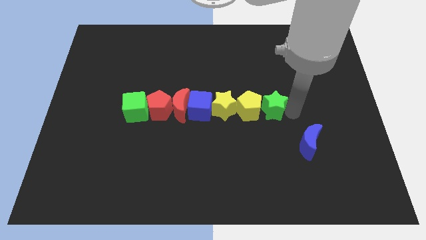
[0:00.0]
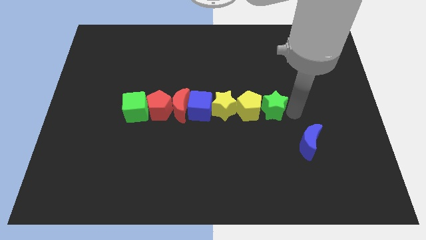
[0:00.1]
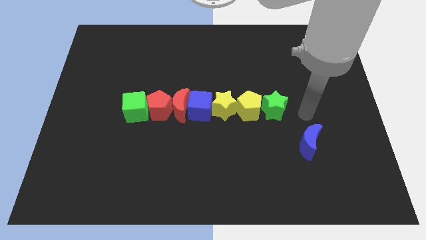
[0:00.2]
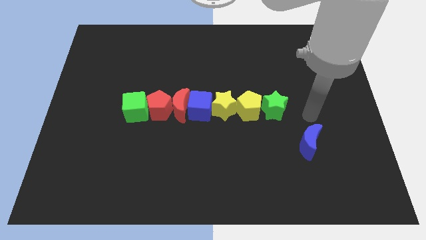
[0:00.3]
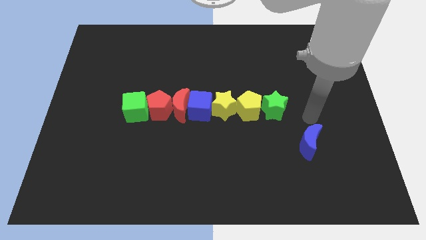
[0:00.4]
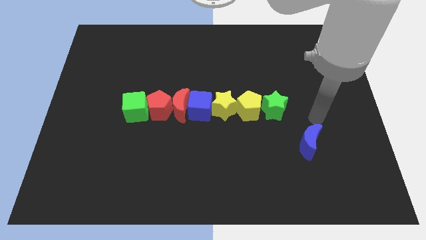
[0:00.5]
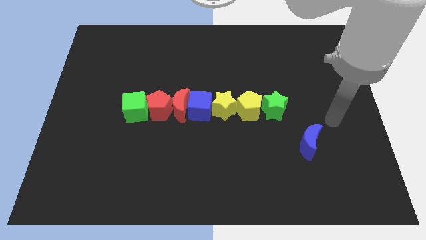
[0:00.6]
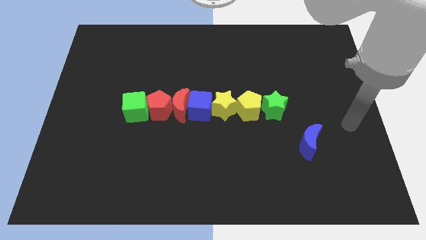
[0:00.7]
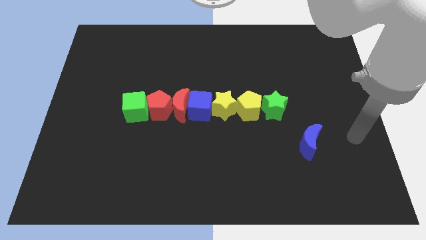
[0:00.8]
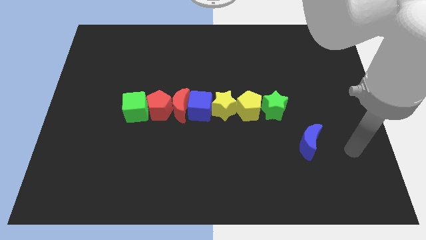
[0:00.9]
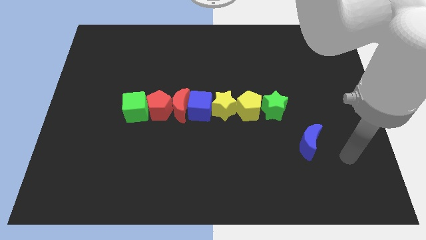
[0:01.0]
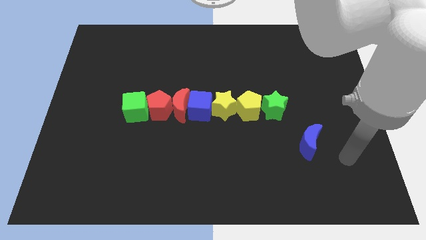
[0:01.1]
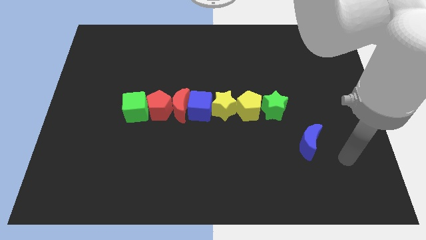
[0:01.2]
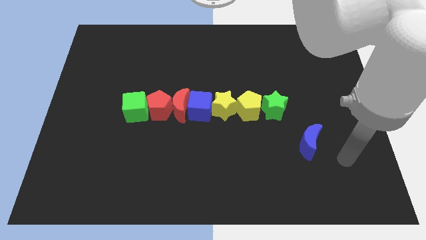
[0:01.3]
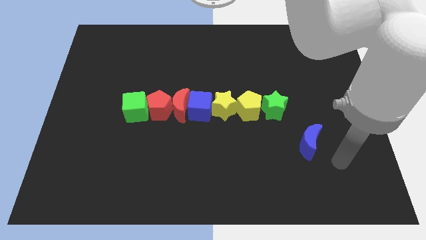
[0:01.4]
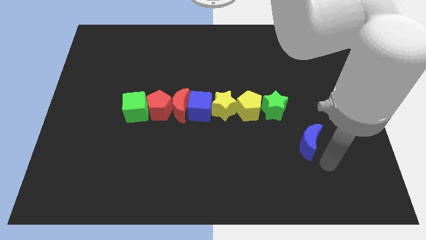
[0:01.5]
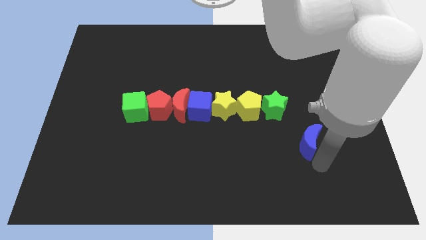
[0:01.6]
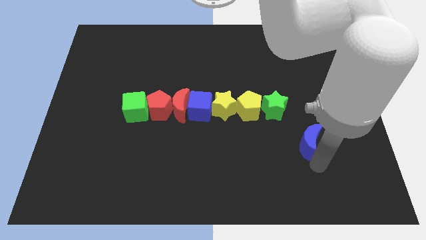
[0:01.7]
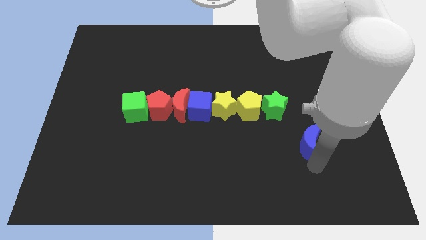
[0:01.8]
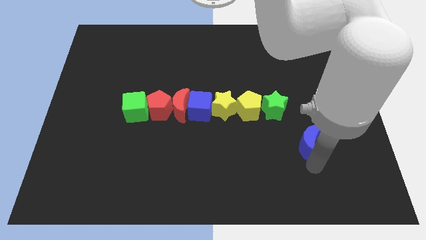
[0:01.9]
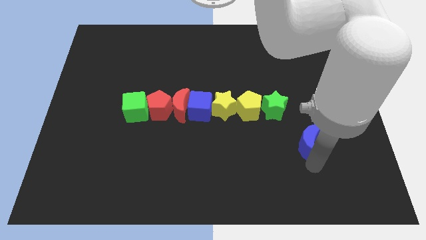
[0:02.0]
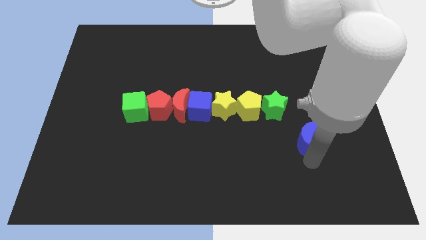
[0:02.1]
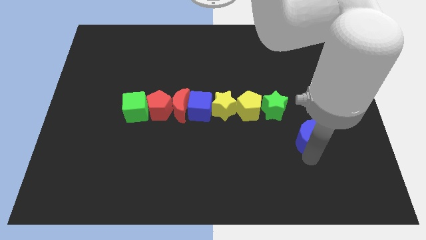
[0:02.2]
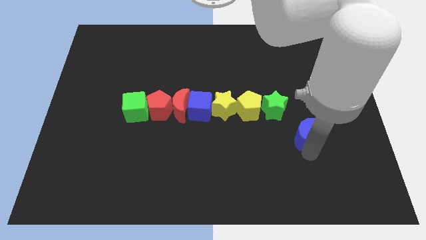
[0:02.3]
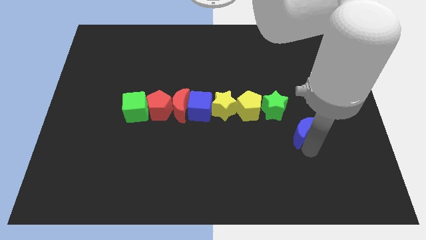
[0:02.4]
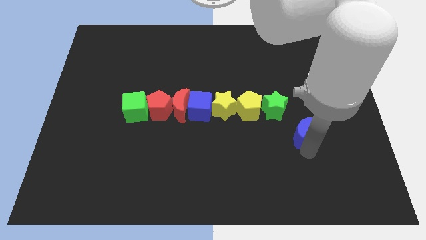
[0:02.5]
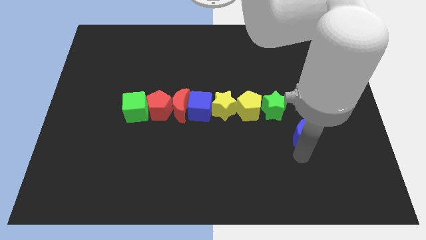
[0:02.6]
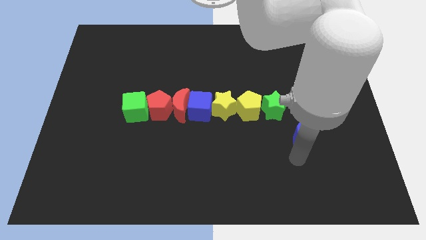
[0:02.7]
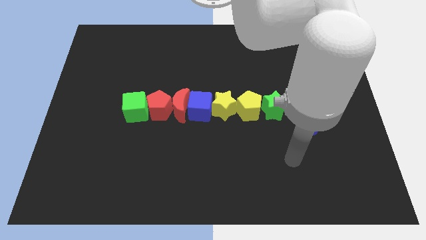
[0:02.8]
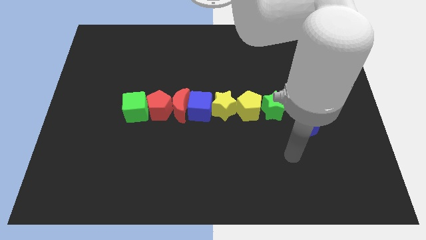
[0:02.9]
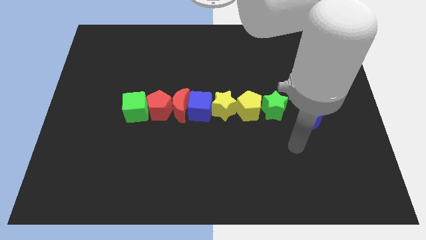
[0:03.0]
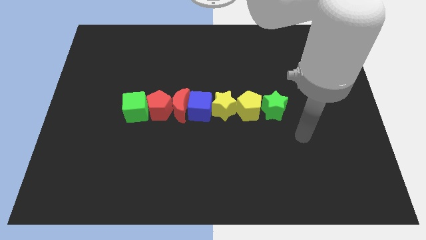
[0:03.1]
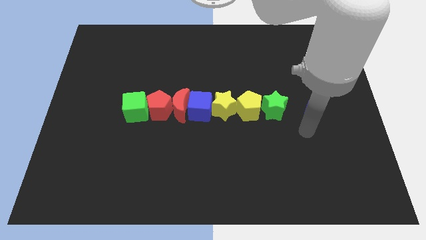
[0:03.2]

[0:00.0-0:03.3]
move the blue crescent to the right side of the green star

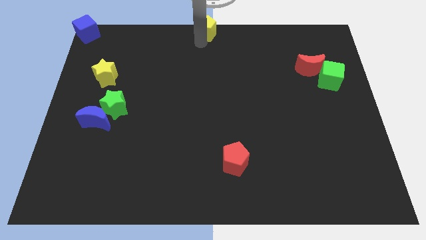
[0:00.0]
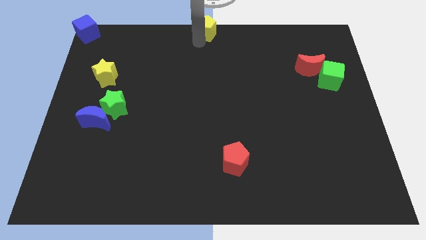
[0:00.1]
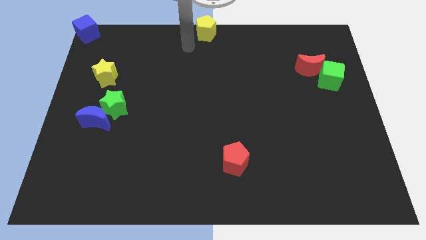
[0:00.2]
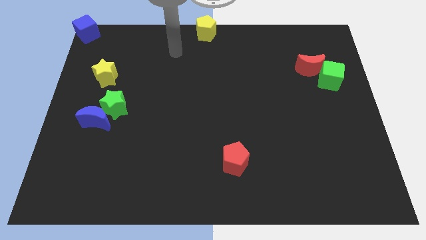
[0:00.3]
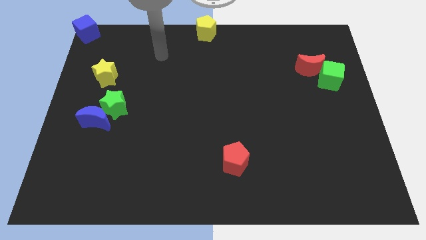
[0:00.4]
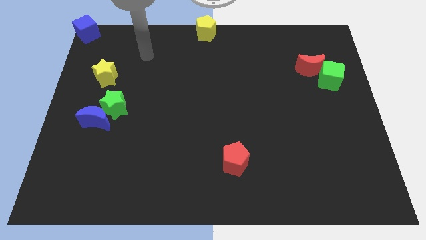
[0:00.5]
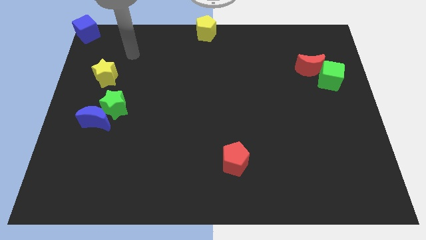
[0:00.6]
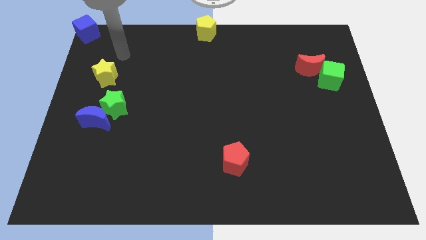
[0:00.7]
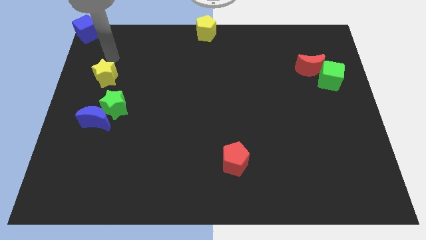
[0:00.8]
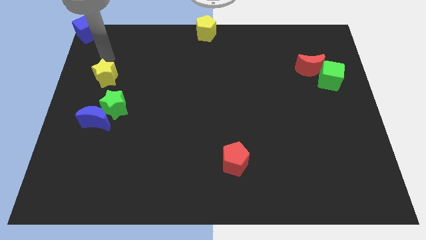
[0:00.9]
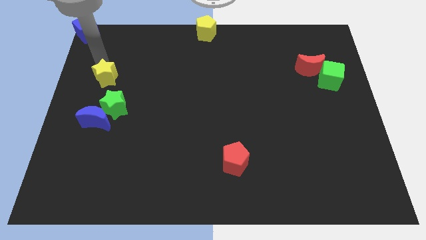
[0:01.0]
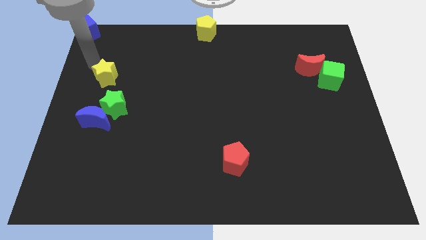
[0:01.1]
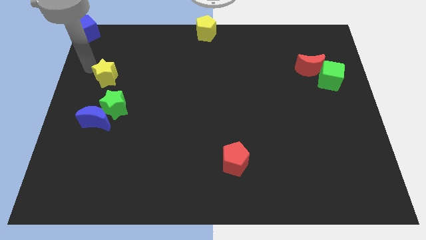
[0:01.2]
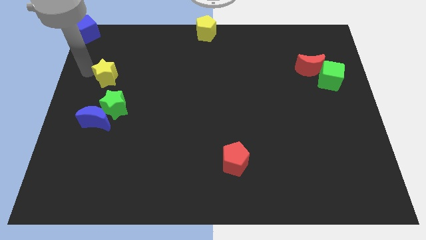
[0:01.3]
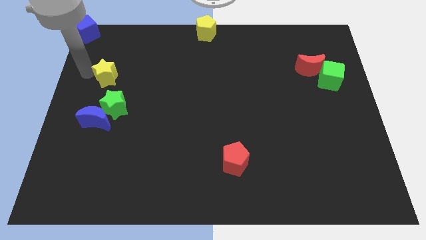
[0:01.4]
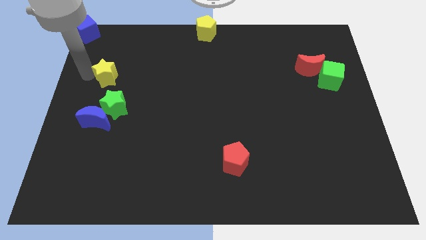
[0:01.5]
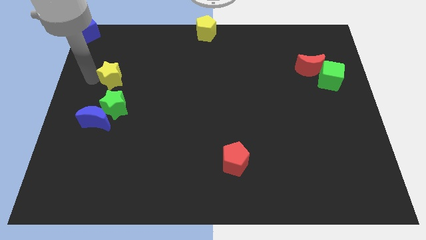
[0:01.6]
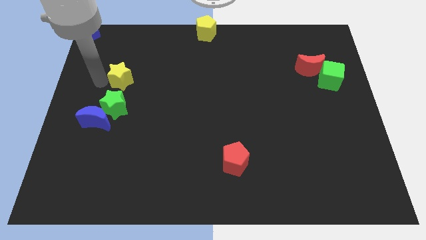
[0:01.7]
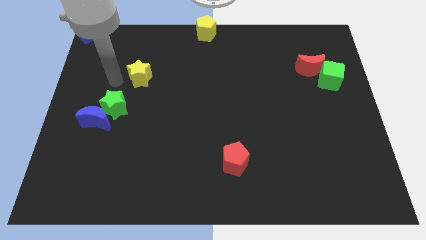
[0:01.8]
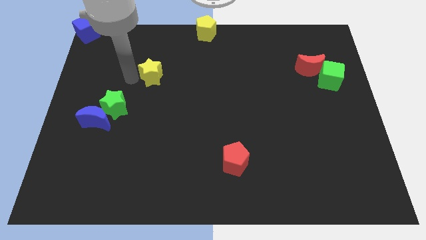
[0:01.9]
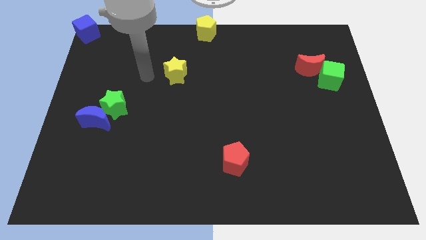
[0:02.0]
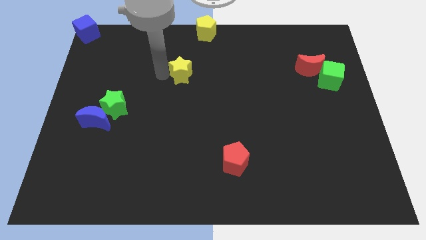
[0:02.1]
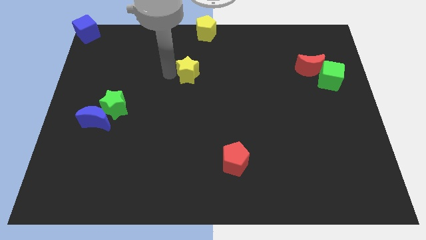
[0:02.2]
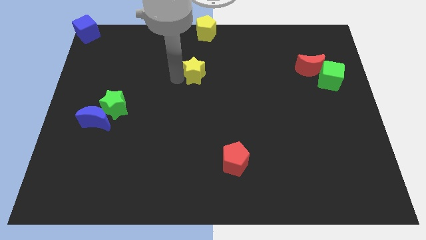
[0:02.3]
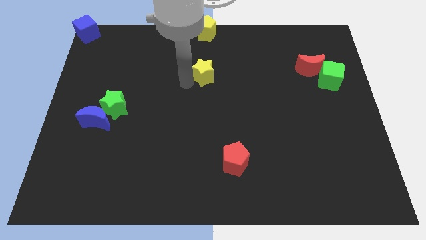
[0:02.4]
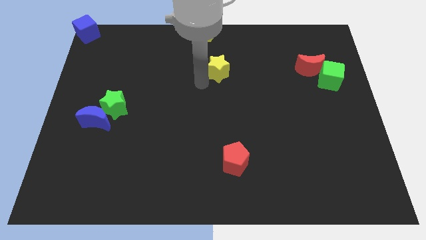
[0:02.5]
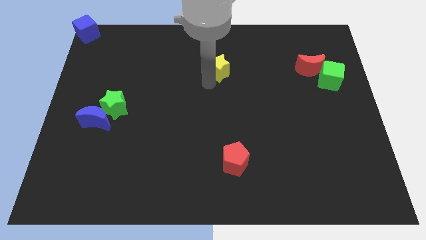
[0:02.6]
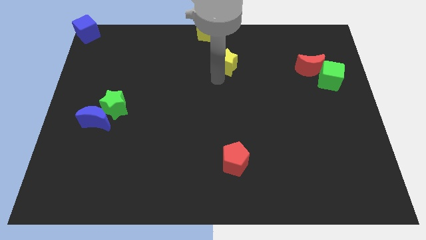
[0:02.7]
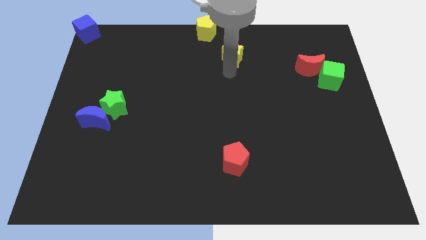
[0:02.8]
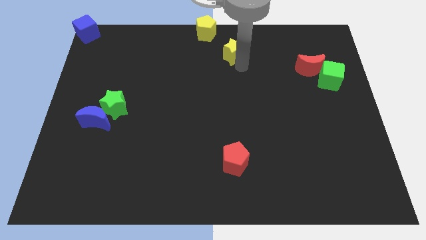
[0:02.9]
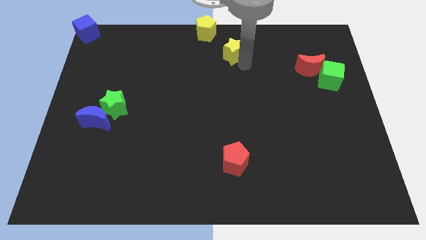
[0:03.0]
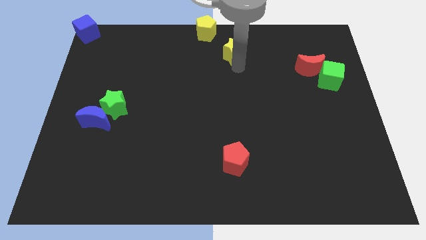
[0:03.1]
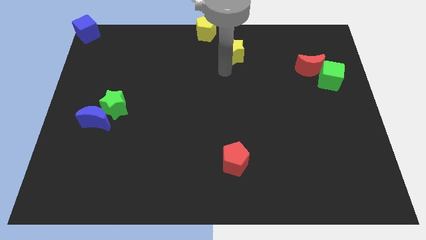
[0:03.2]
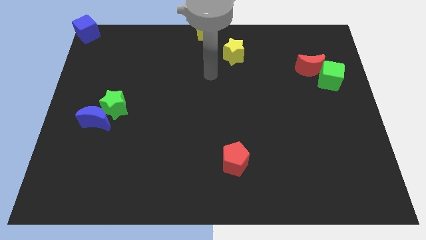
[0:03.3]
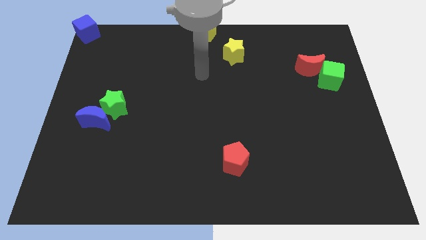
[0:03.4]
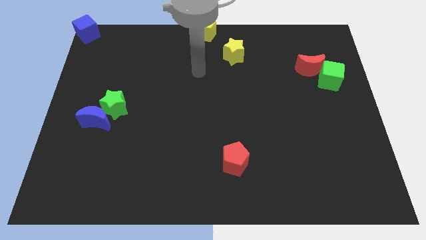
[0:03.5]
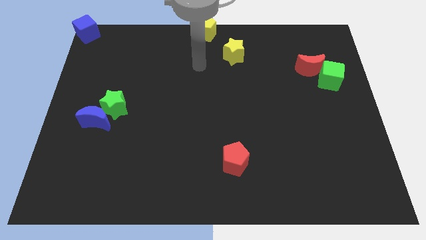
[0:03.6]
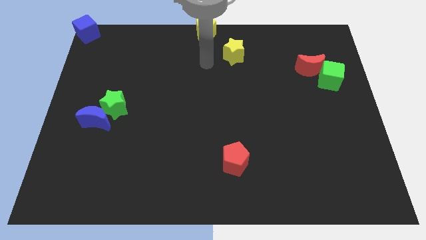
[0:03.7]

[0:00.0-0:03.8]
move the yellow star diagonal below yellow pentagon

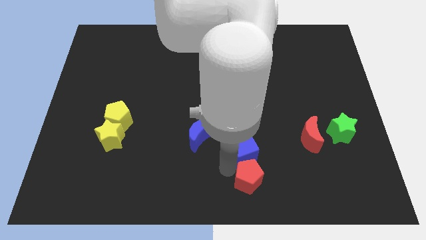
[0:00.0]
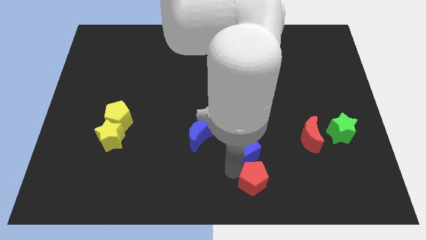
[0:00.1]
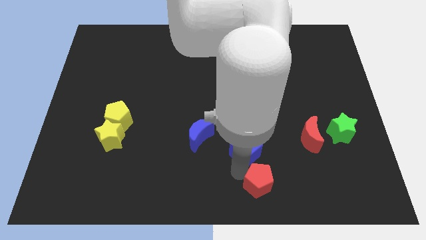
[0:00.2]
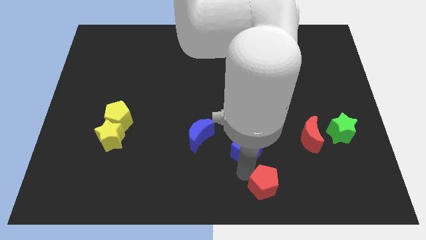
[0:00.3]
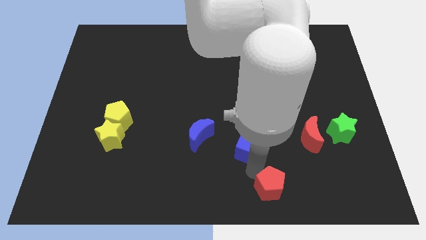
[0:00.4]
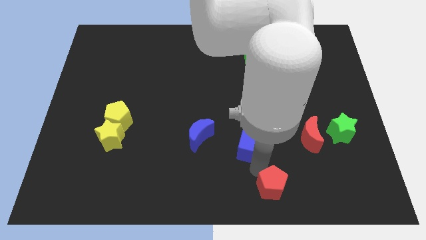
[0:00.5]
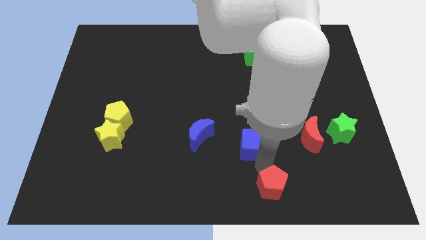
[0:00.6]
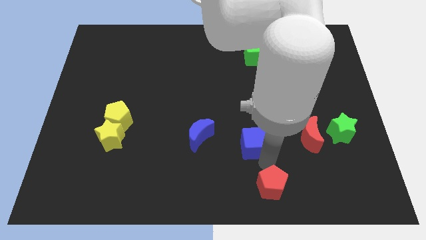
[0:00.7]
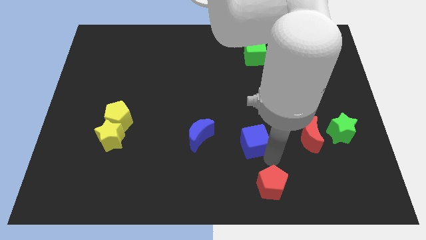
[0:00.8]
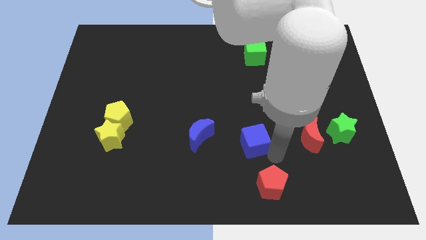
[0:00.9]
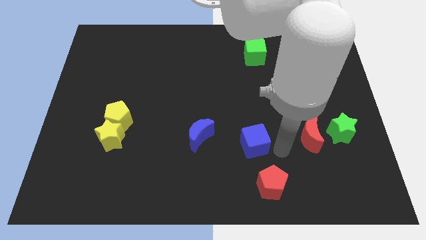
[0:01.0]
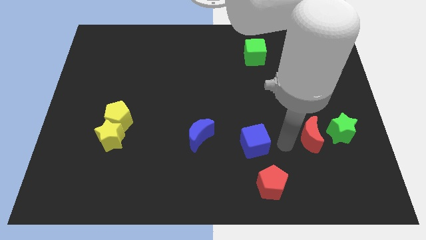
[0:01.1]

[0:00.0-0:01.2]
separate the blue cube and the red pentagon

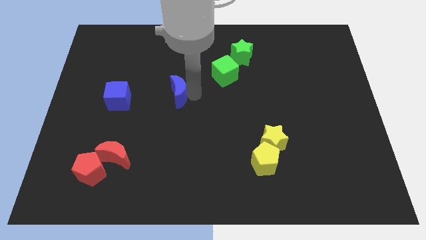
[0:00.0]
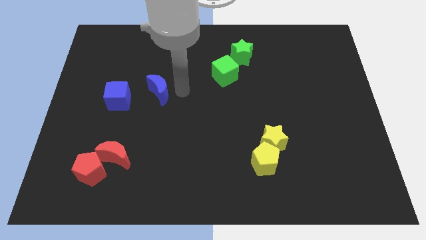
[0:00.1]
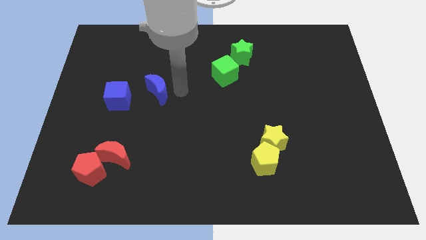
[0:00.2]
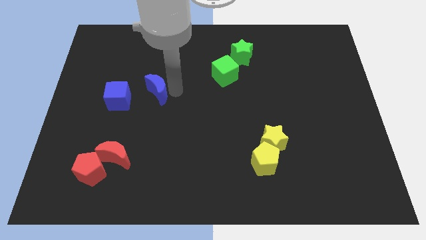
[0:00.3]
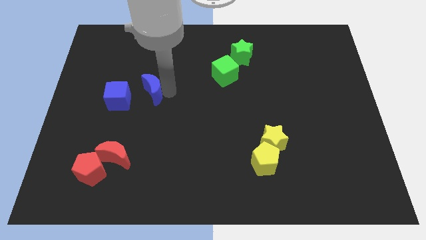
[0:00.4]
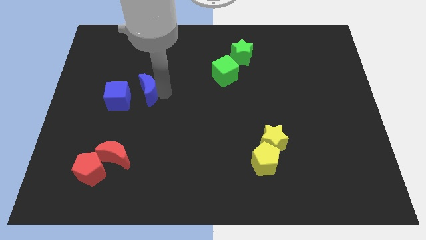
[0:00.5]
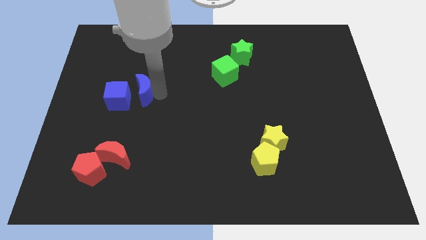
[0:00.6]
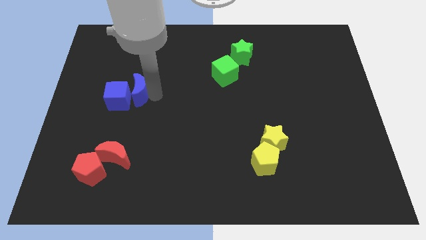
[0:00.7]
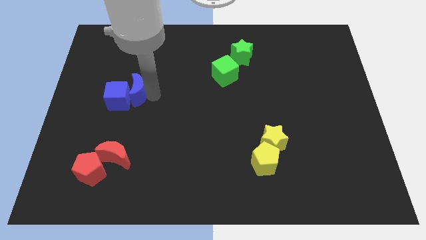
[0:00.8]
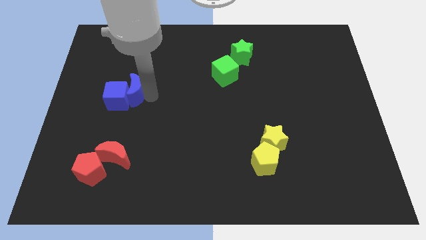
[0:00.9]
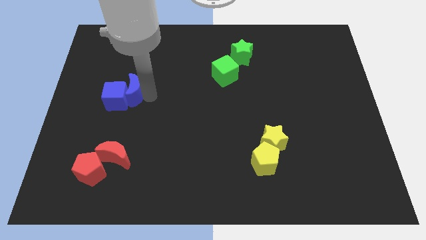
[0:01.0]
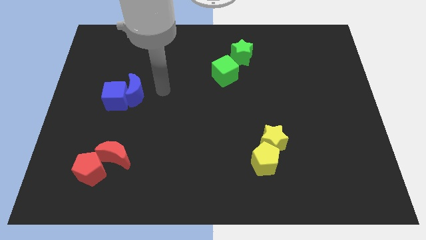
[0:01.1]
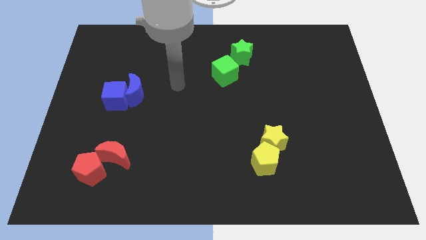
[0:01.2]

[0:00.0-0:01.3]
put the blue moon into the blue cube
